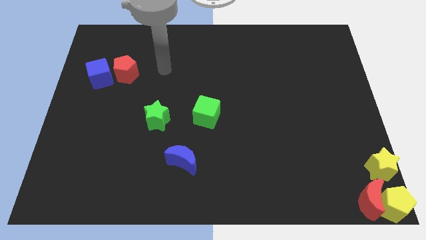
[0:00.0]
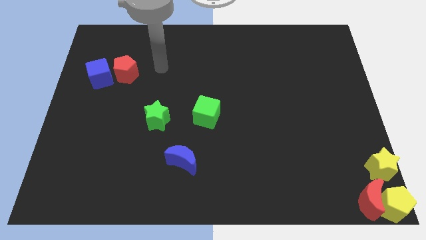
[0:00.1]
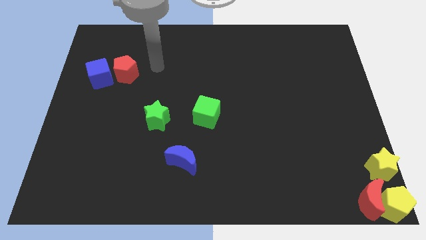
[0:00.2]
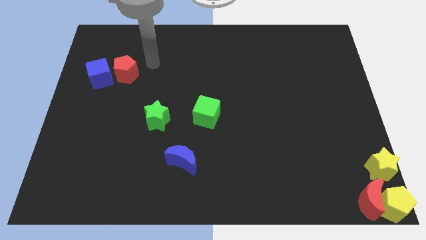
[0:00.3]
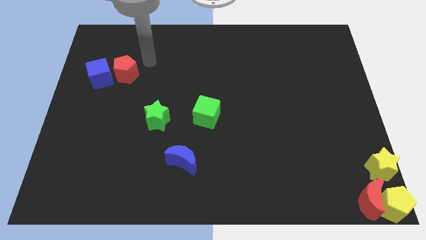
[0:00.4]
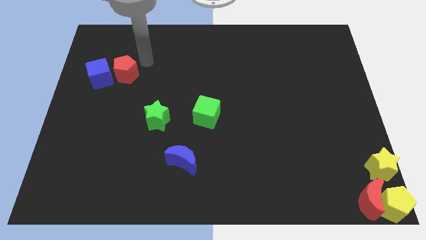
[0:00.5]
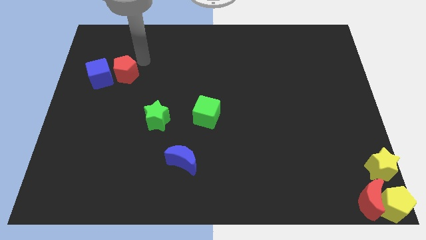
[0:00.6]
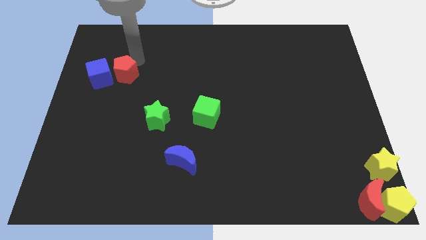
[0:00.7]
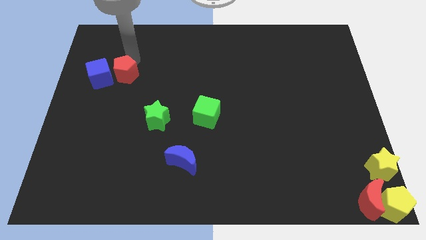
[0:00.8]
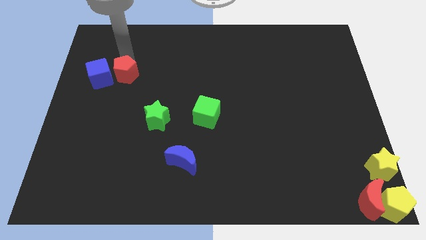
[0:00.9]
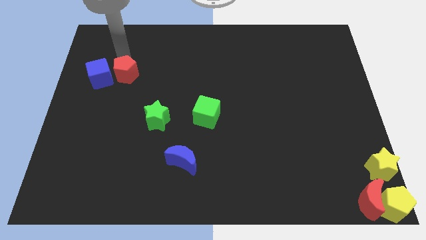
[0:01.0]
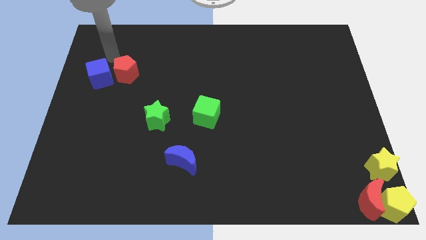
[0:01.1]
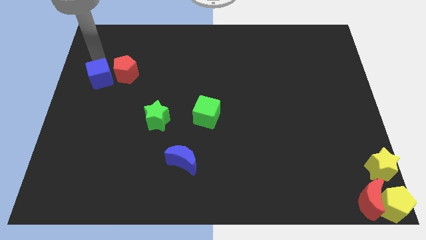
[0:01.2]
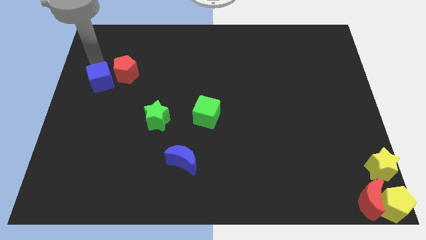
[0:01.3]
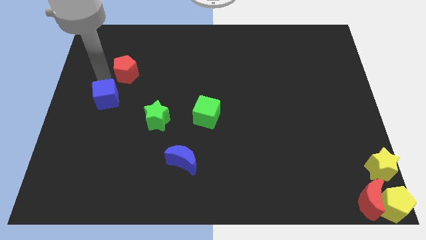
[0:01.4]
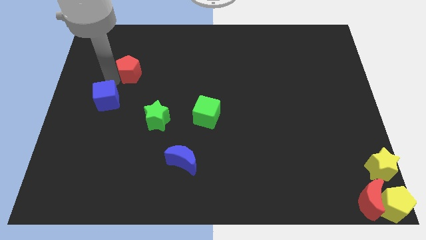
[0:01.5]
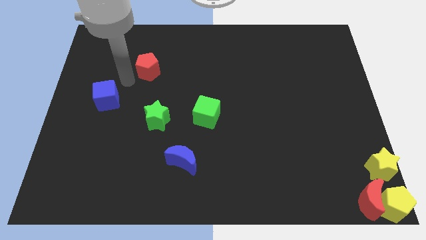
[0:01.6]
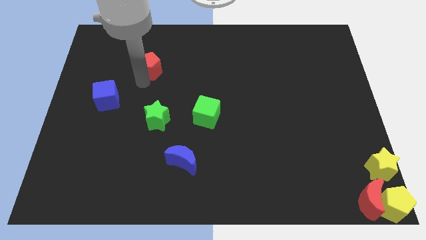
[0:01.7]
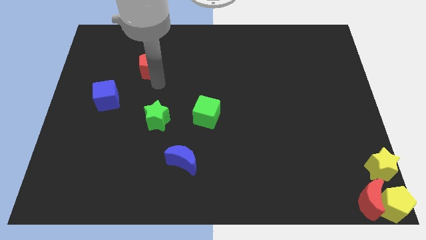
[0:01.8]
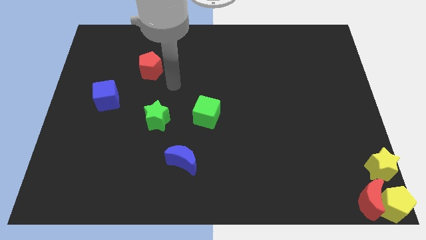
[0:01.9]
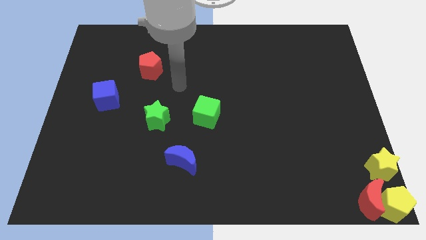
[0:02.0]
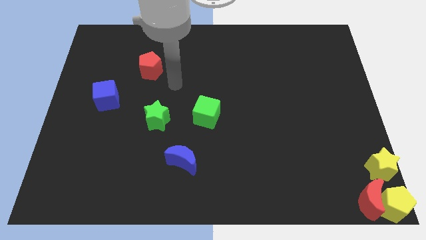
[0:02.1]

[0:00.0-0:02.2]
separate red pentagon from blue cube

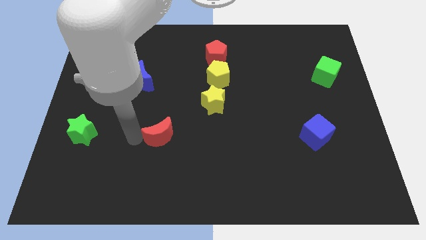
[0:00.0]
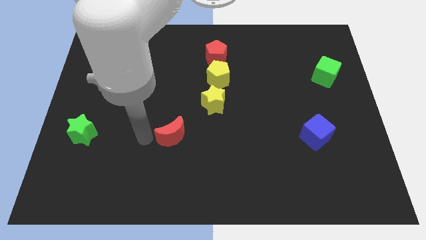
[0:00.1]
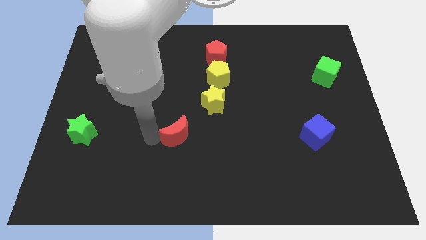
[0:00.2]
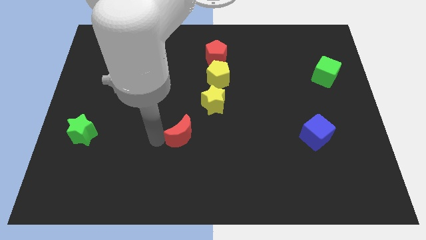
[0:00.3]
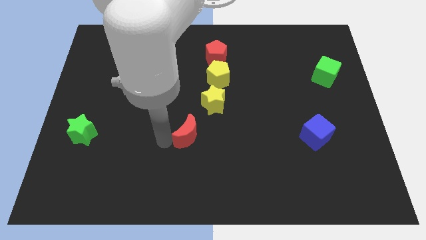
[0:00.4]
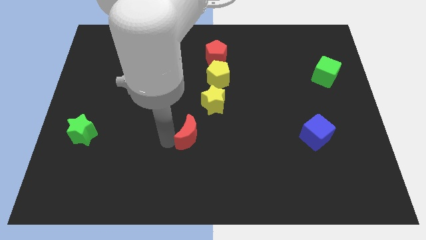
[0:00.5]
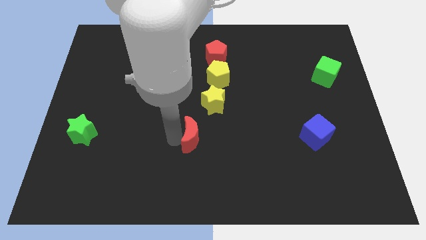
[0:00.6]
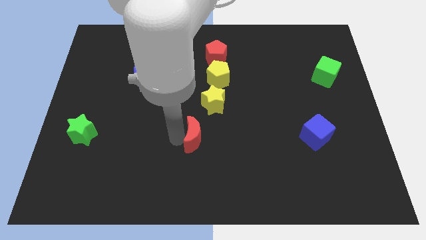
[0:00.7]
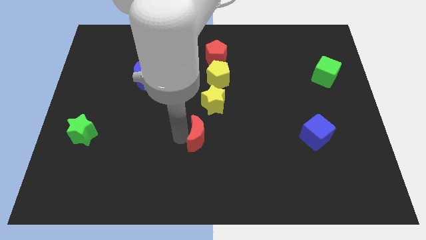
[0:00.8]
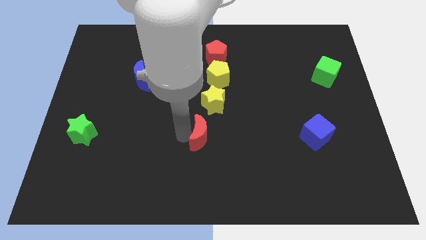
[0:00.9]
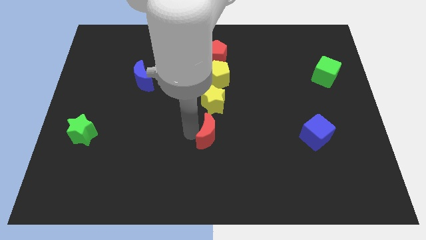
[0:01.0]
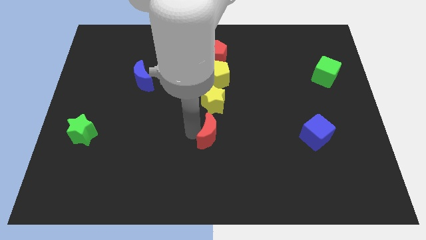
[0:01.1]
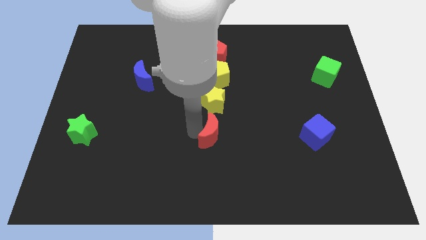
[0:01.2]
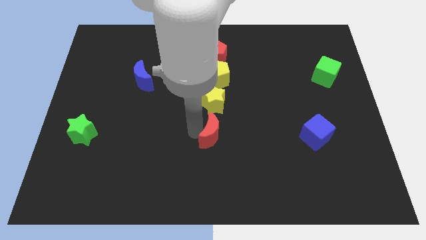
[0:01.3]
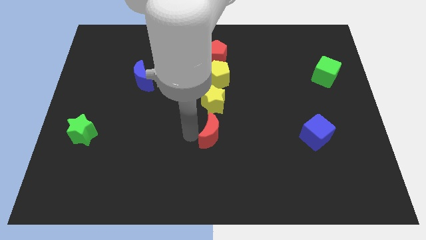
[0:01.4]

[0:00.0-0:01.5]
slide red moon below the yellow star

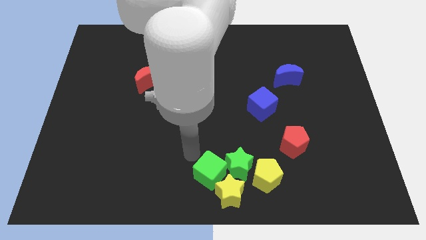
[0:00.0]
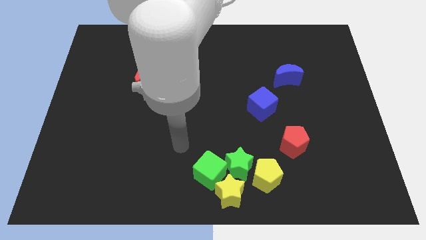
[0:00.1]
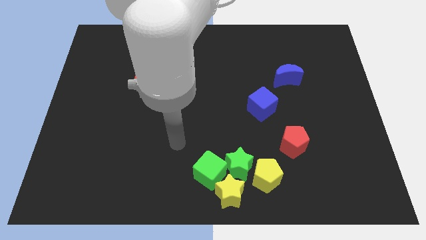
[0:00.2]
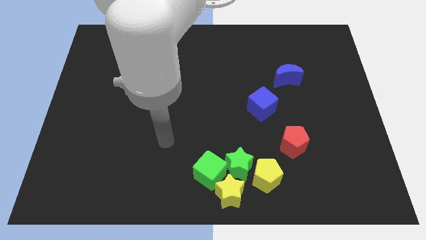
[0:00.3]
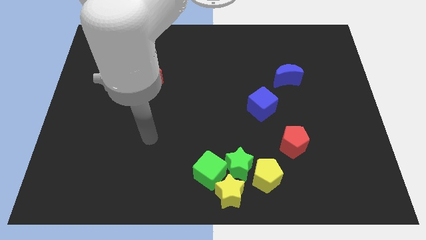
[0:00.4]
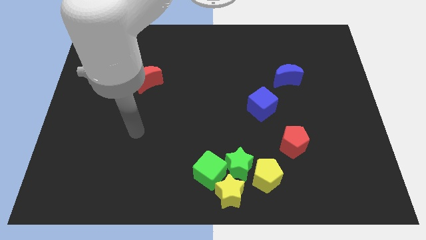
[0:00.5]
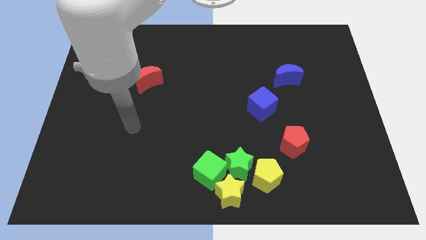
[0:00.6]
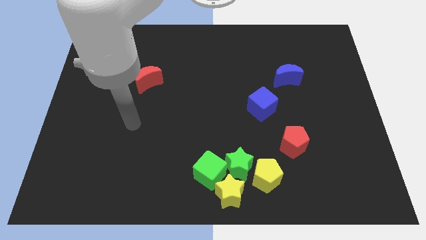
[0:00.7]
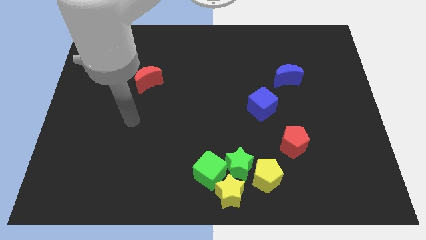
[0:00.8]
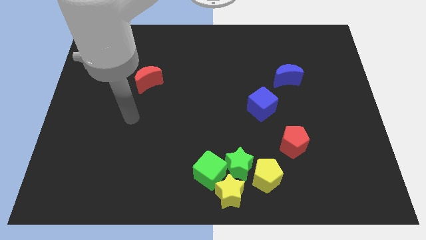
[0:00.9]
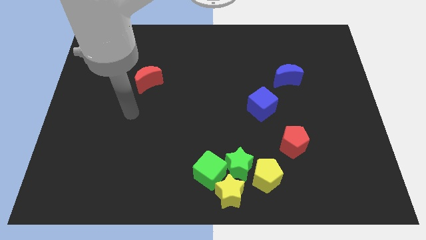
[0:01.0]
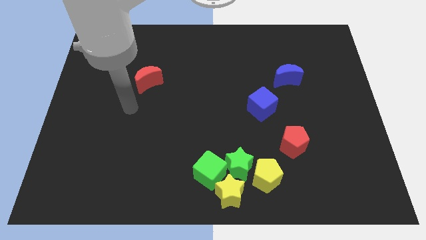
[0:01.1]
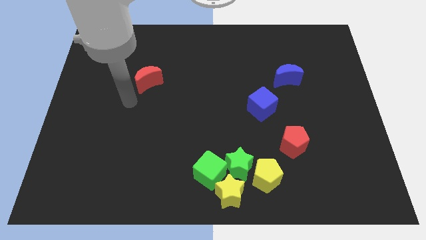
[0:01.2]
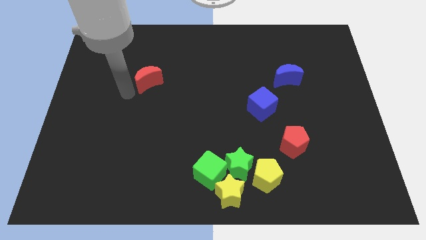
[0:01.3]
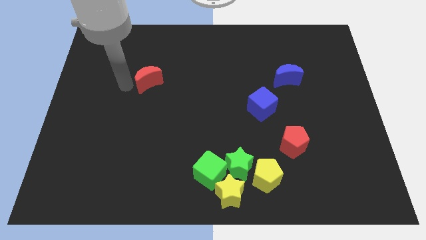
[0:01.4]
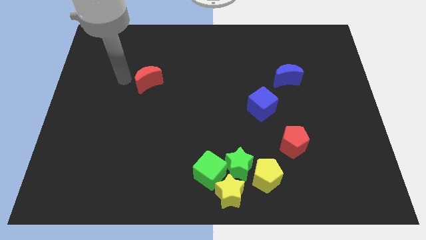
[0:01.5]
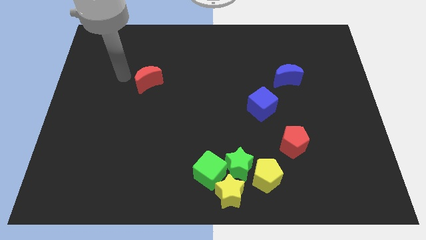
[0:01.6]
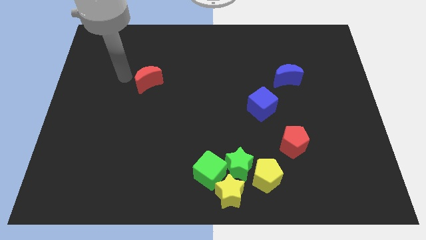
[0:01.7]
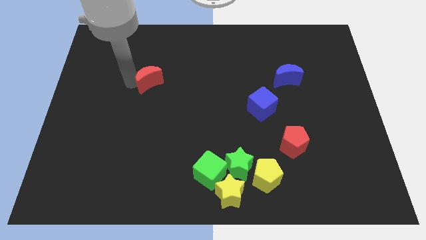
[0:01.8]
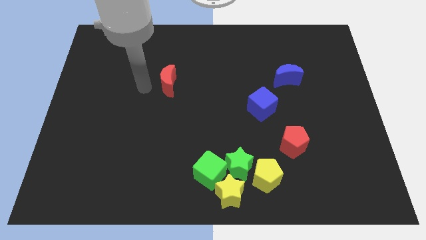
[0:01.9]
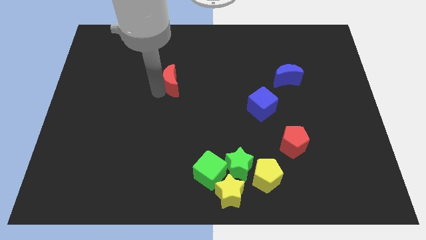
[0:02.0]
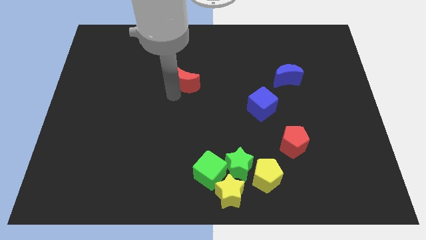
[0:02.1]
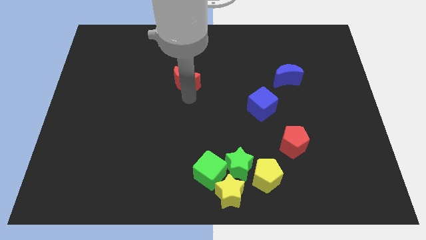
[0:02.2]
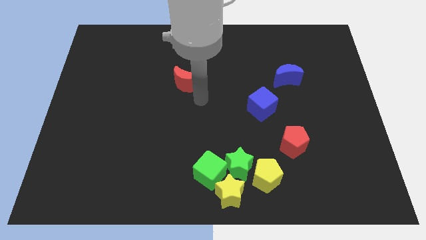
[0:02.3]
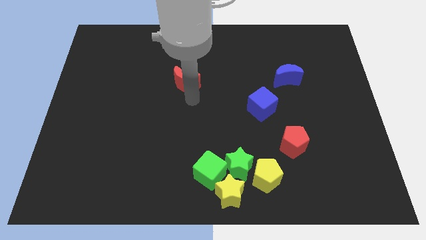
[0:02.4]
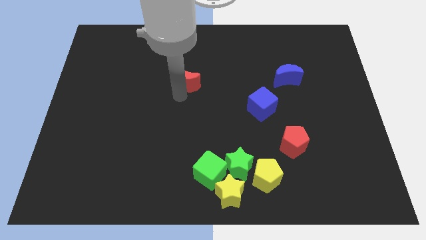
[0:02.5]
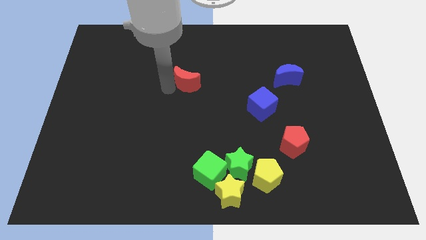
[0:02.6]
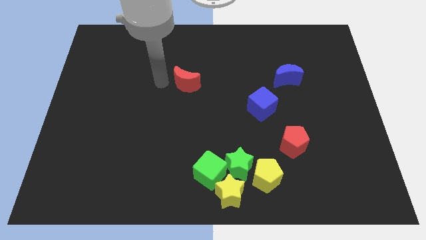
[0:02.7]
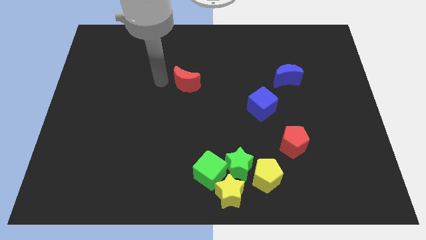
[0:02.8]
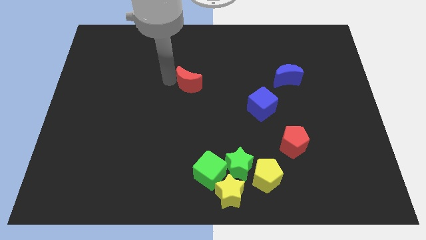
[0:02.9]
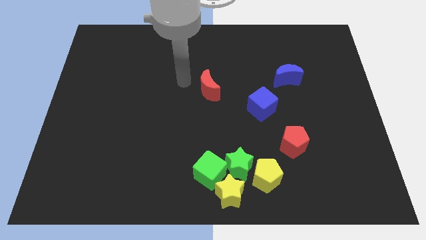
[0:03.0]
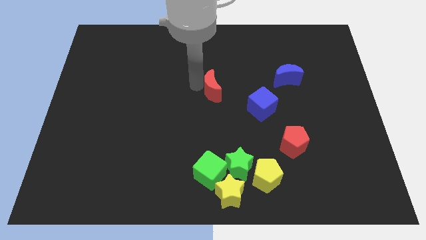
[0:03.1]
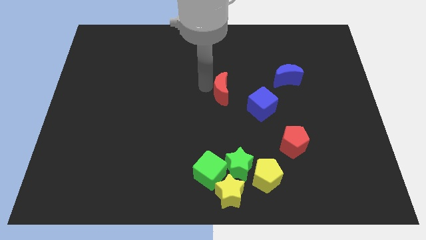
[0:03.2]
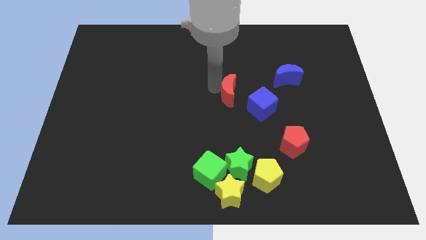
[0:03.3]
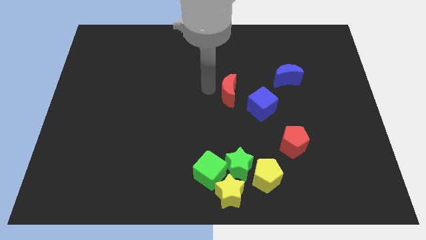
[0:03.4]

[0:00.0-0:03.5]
push the red crescent towards the blue cube

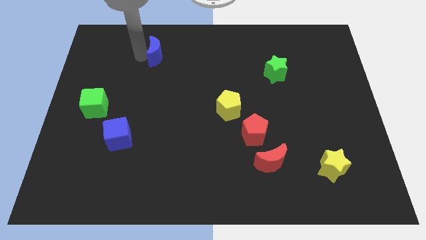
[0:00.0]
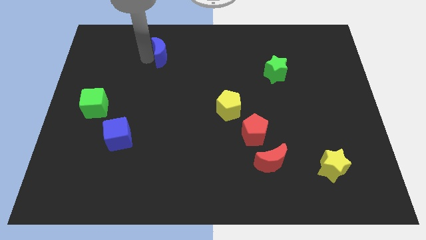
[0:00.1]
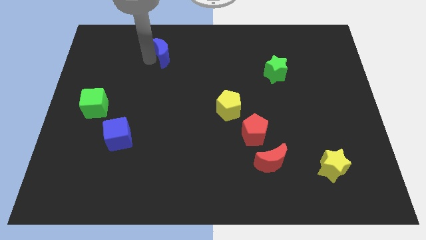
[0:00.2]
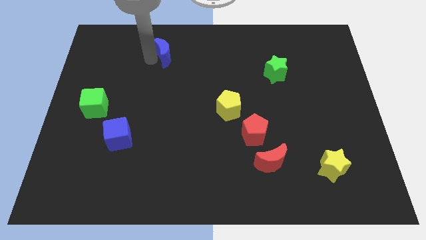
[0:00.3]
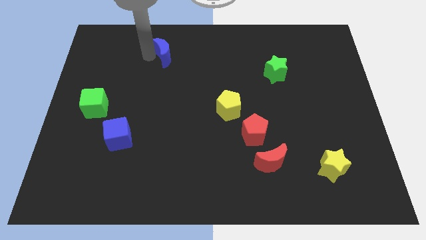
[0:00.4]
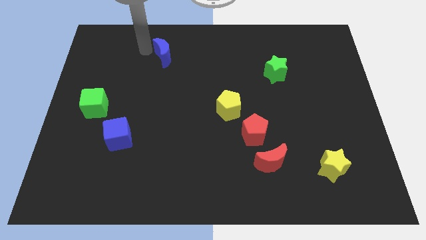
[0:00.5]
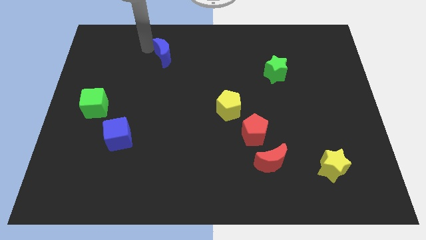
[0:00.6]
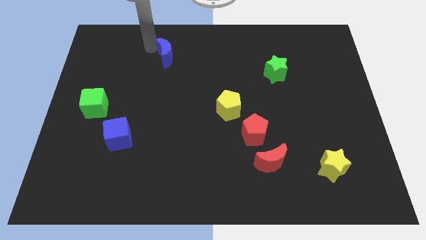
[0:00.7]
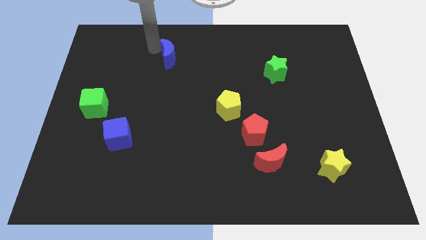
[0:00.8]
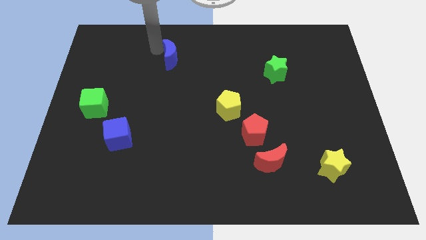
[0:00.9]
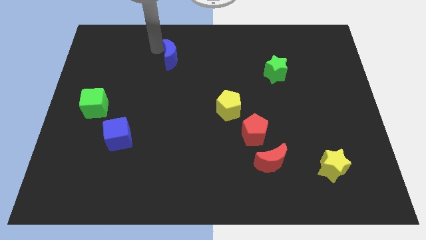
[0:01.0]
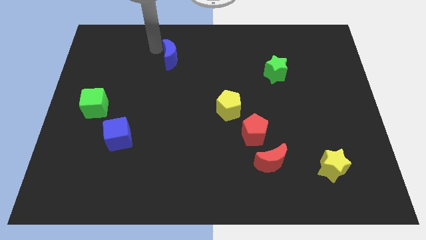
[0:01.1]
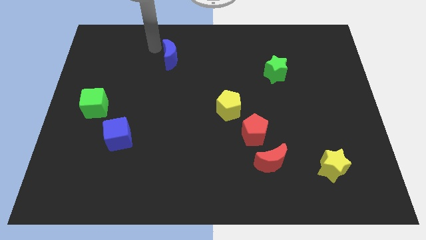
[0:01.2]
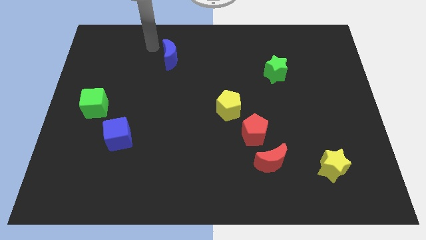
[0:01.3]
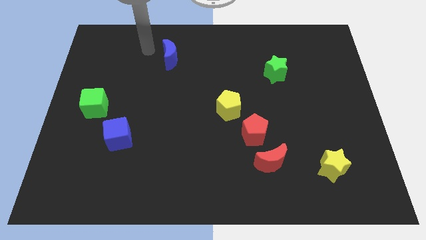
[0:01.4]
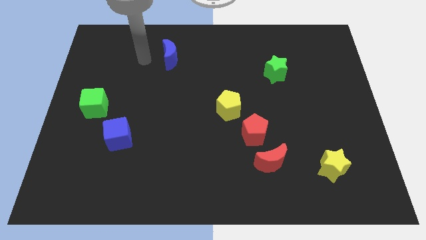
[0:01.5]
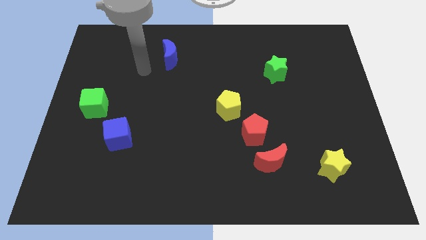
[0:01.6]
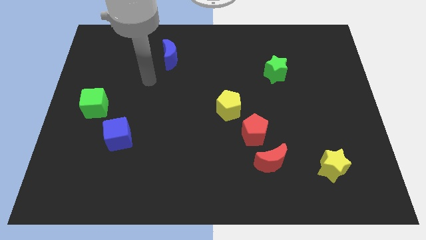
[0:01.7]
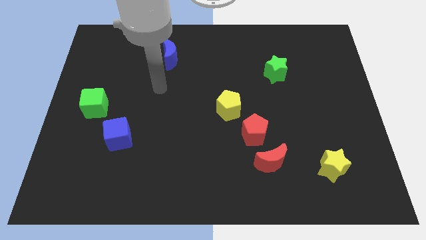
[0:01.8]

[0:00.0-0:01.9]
move blue moon towards the right of the board
